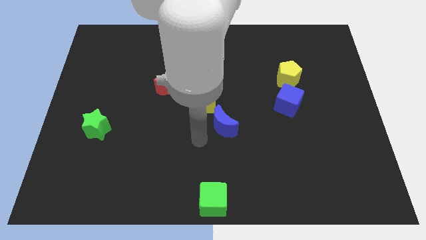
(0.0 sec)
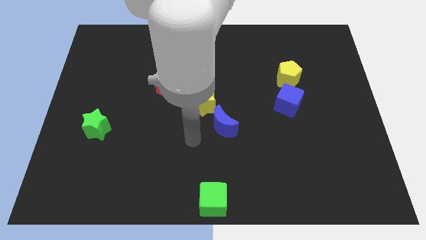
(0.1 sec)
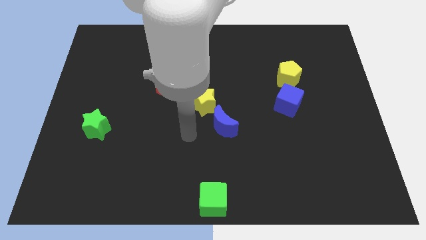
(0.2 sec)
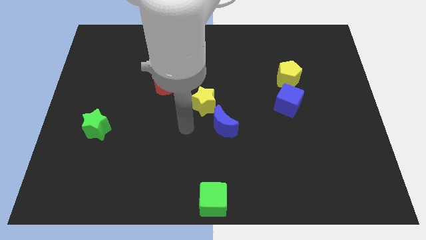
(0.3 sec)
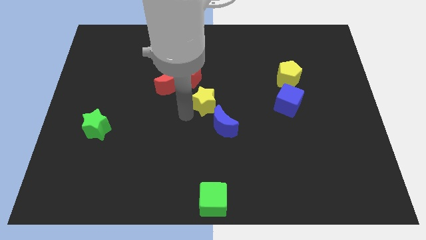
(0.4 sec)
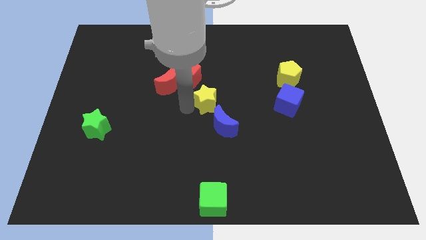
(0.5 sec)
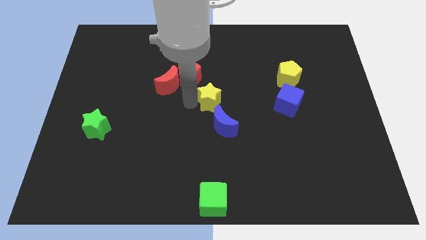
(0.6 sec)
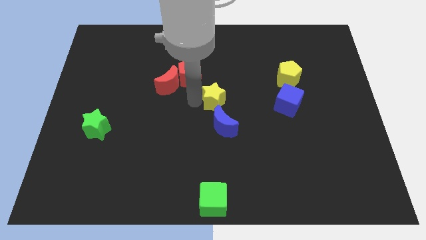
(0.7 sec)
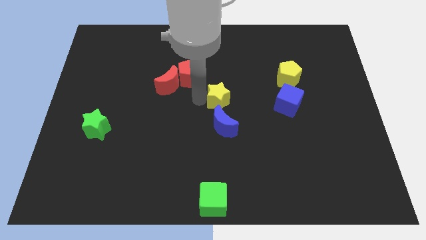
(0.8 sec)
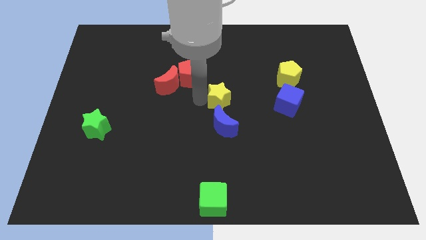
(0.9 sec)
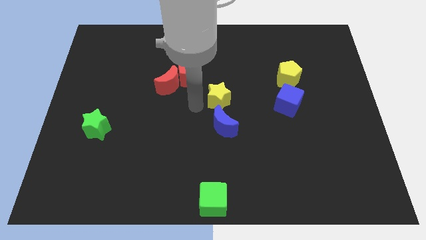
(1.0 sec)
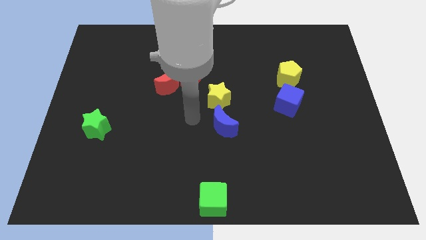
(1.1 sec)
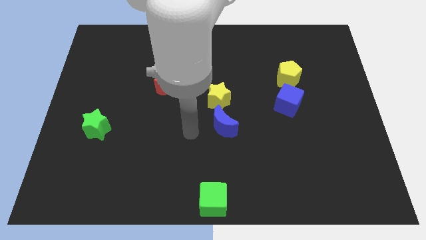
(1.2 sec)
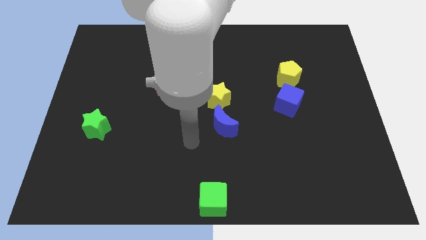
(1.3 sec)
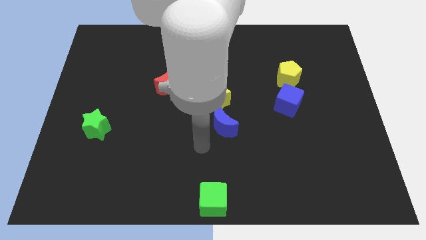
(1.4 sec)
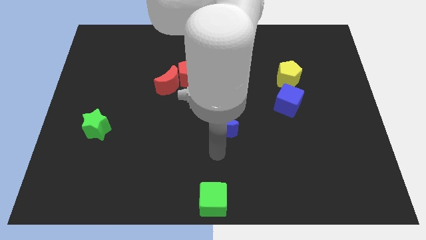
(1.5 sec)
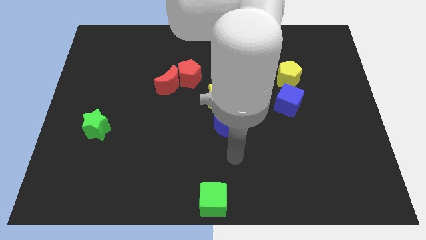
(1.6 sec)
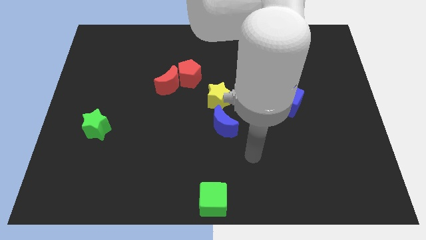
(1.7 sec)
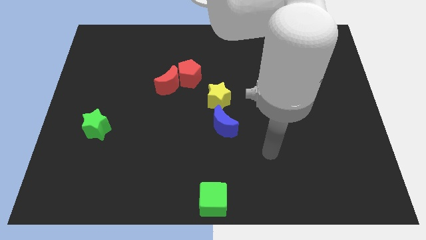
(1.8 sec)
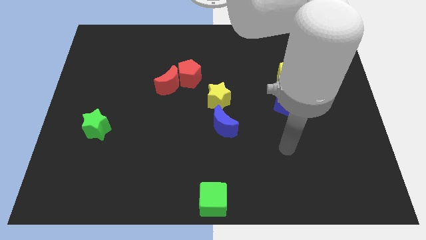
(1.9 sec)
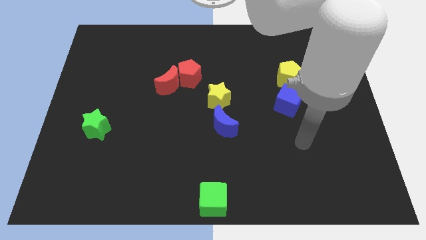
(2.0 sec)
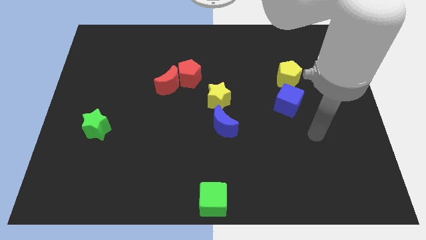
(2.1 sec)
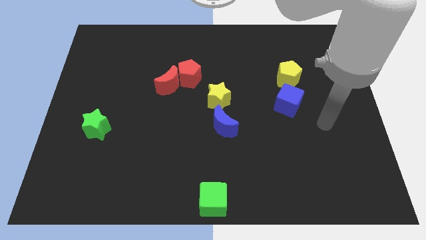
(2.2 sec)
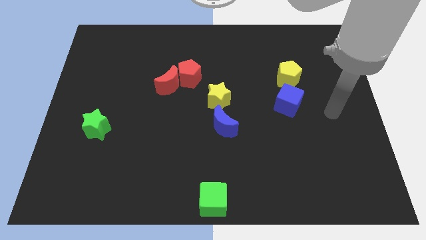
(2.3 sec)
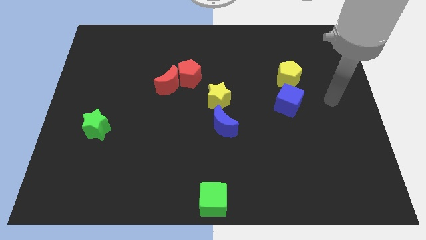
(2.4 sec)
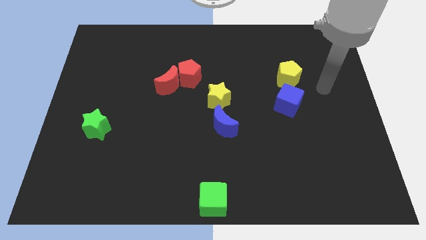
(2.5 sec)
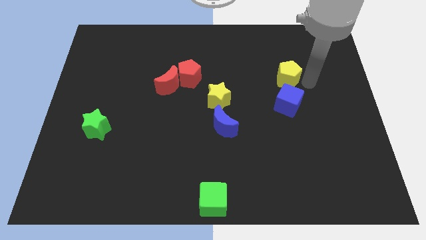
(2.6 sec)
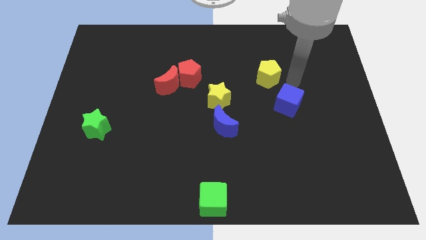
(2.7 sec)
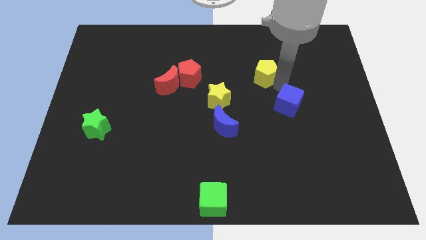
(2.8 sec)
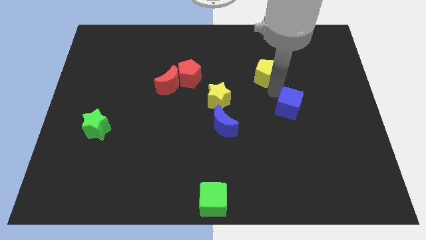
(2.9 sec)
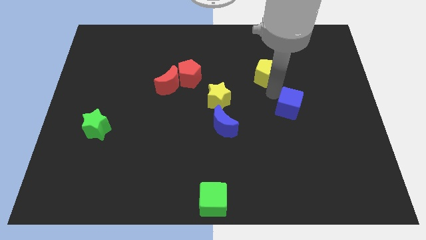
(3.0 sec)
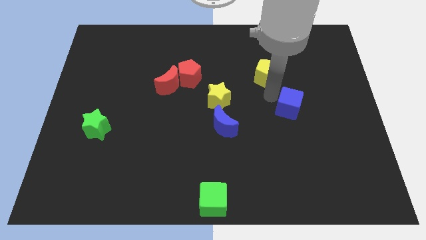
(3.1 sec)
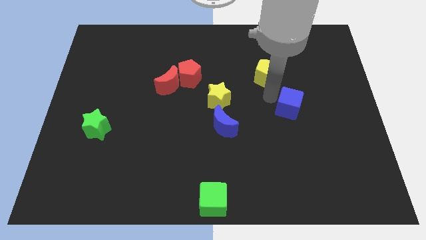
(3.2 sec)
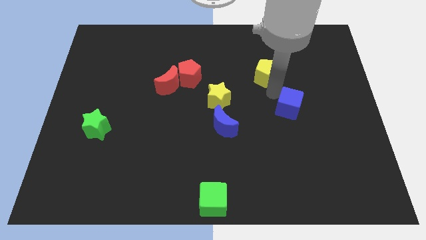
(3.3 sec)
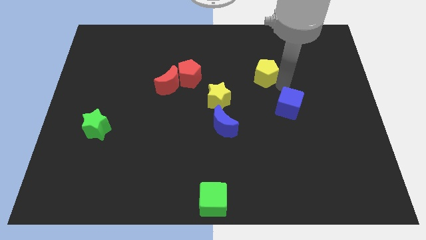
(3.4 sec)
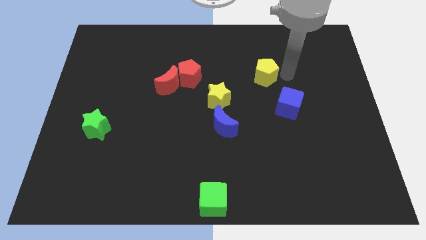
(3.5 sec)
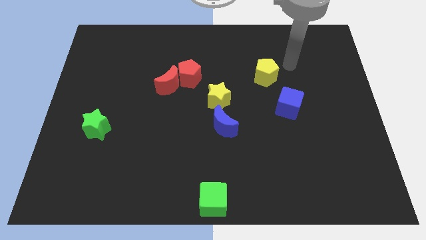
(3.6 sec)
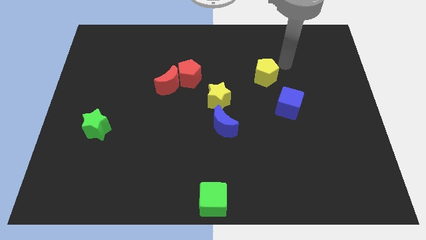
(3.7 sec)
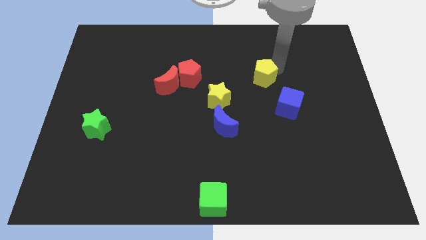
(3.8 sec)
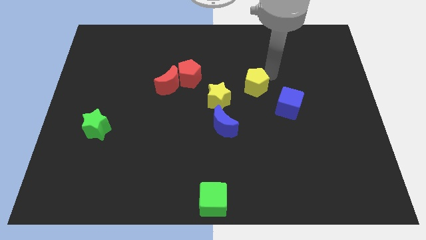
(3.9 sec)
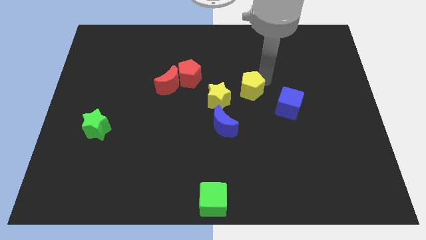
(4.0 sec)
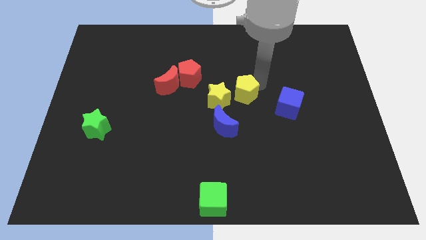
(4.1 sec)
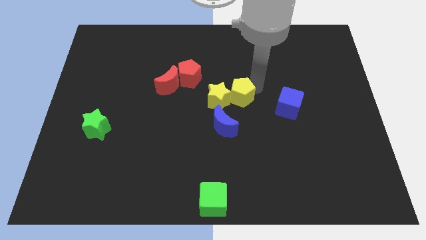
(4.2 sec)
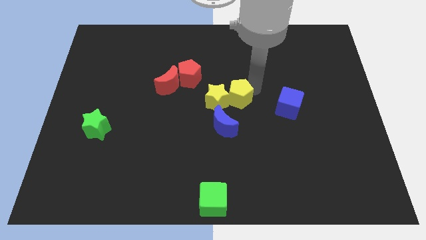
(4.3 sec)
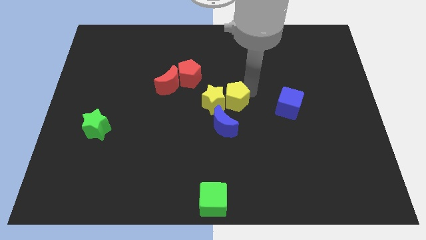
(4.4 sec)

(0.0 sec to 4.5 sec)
push the yellow pentagon into yellow star

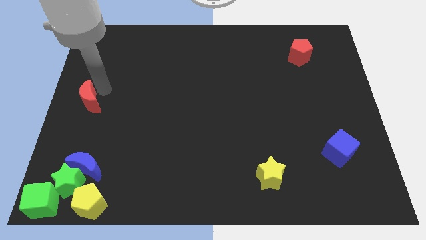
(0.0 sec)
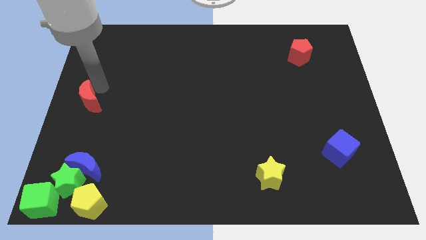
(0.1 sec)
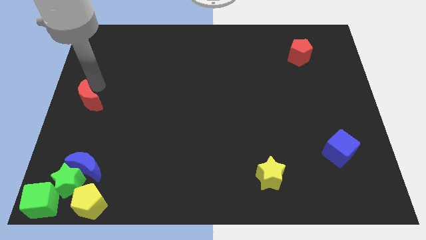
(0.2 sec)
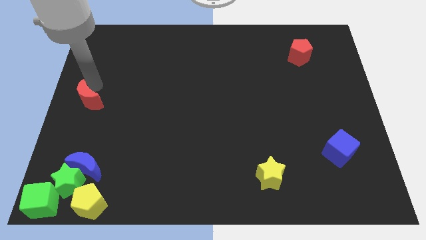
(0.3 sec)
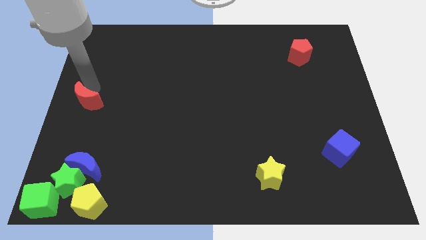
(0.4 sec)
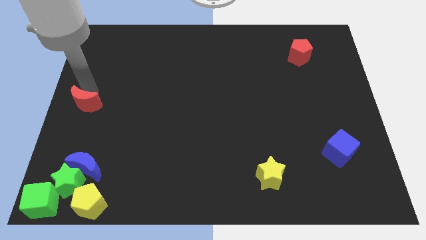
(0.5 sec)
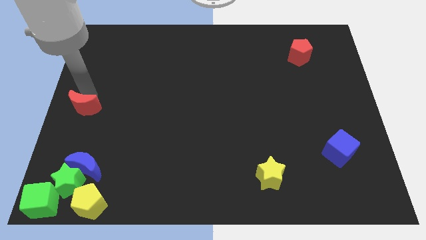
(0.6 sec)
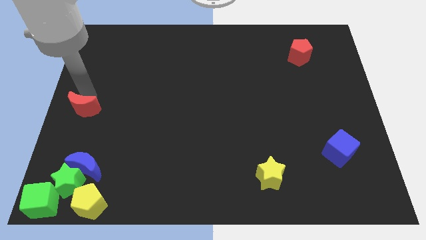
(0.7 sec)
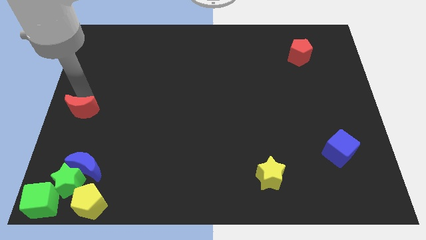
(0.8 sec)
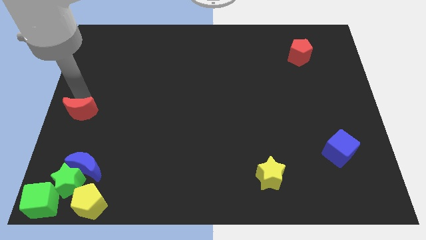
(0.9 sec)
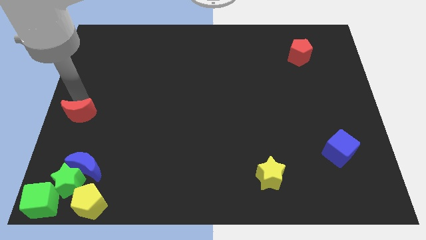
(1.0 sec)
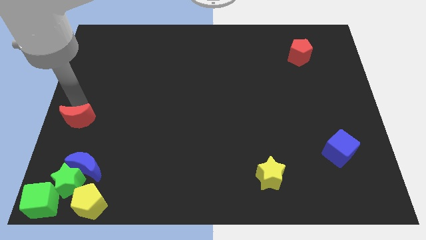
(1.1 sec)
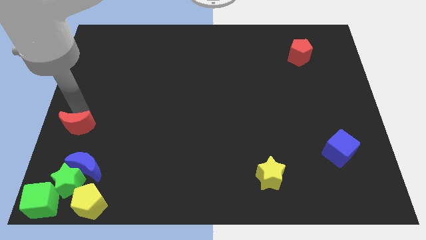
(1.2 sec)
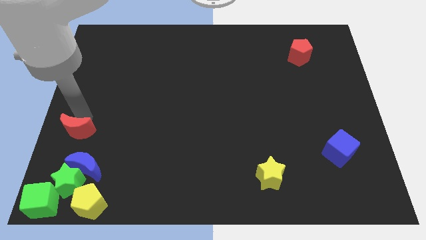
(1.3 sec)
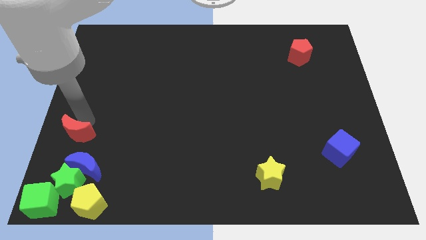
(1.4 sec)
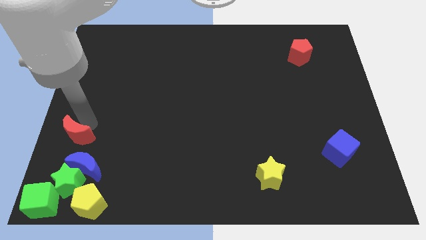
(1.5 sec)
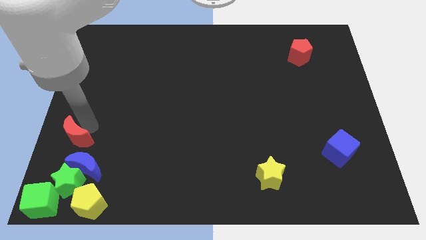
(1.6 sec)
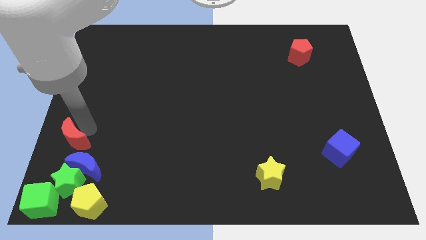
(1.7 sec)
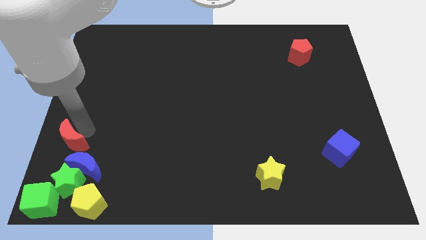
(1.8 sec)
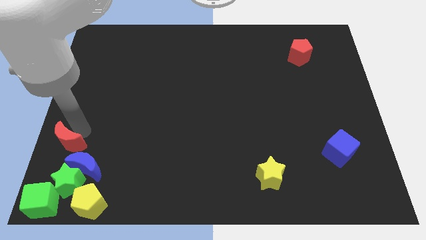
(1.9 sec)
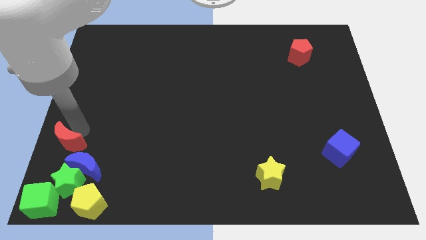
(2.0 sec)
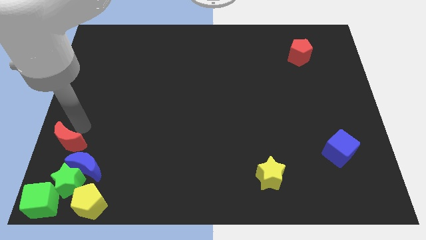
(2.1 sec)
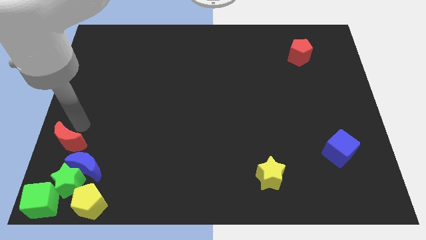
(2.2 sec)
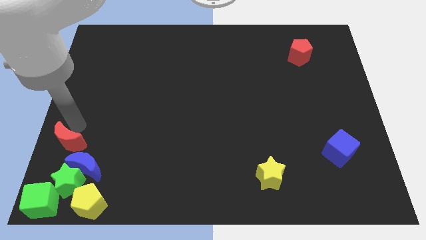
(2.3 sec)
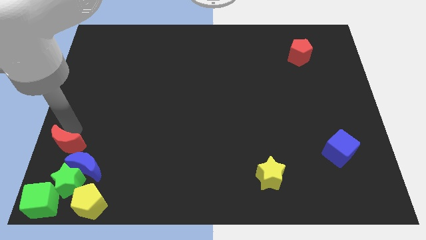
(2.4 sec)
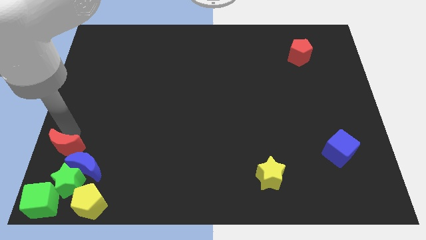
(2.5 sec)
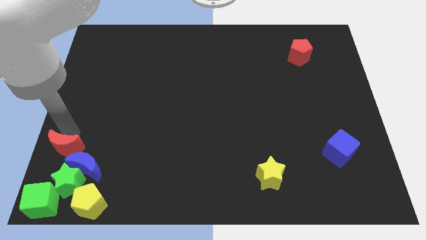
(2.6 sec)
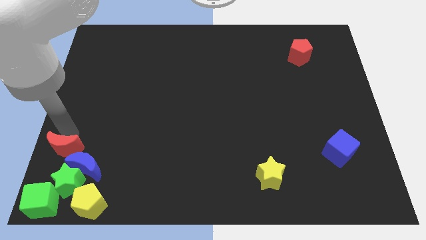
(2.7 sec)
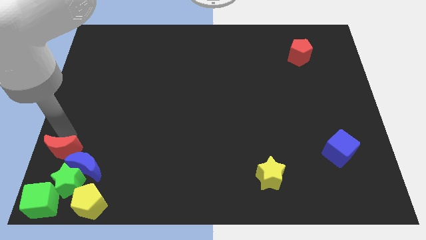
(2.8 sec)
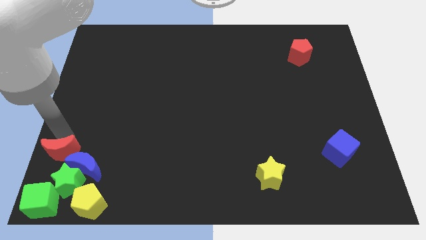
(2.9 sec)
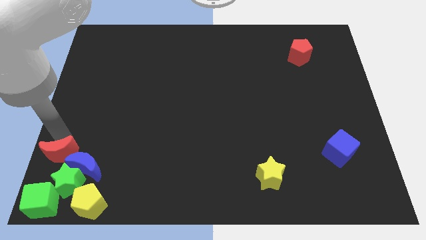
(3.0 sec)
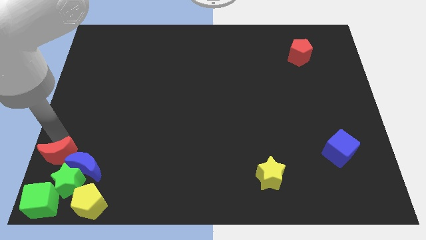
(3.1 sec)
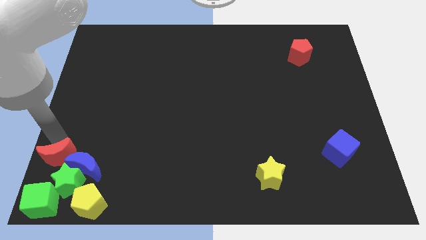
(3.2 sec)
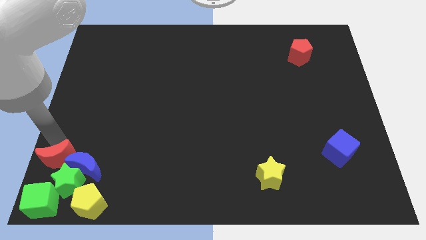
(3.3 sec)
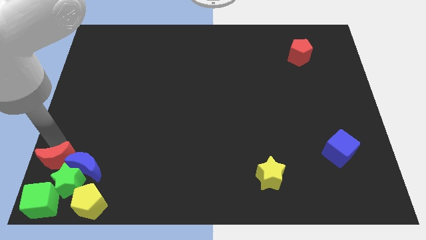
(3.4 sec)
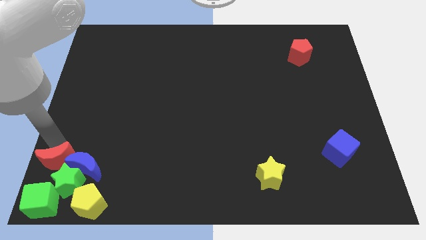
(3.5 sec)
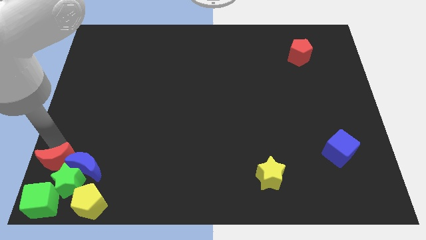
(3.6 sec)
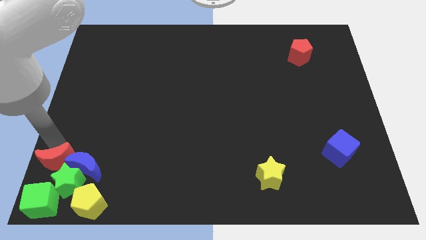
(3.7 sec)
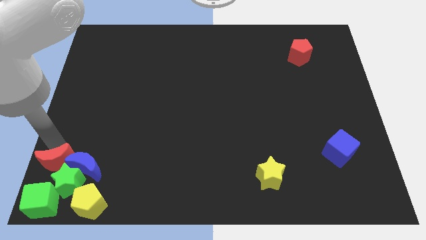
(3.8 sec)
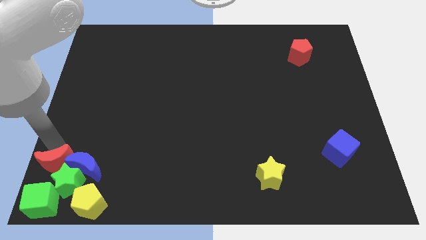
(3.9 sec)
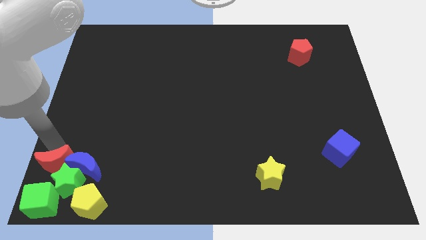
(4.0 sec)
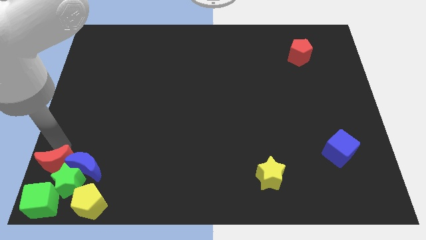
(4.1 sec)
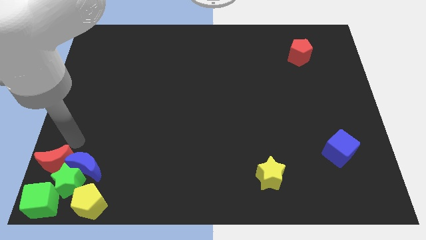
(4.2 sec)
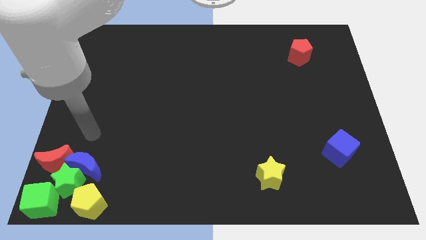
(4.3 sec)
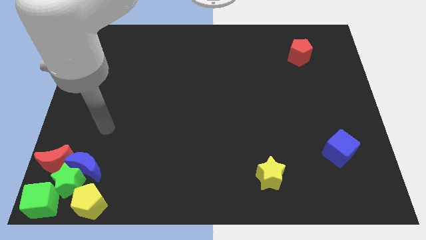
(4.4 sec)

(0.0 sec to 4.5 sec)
move the red moon to the left side of the blue moon
